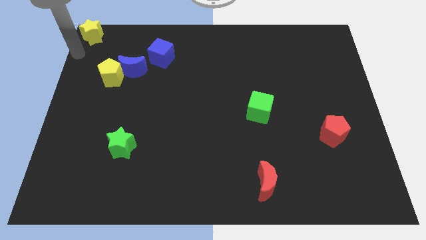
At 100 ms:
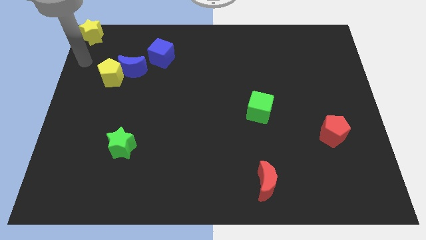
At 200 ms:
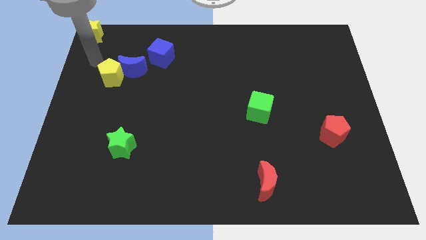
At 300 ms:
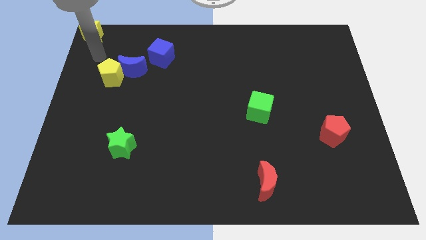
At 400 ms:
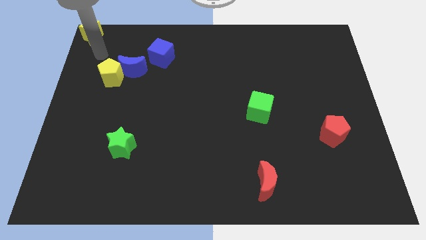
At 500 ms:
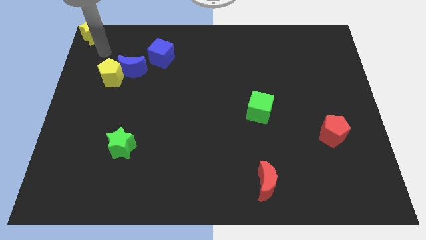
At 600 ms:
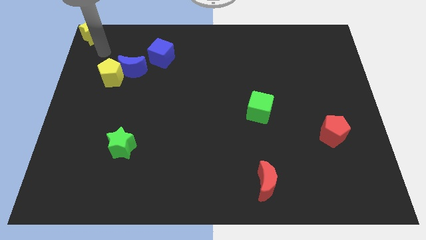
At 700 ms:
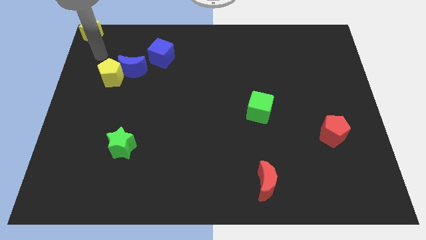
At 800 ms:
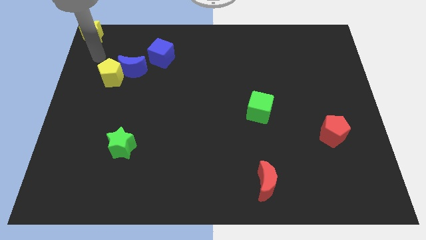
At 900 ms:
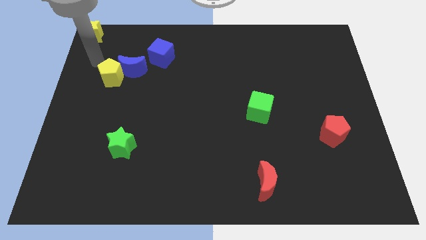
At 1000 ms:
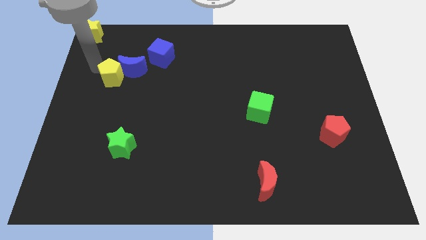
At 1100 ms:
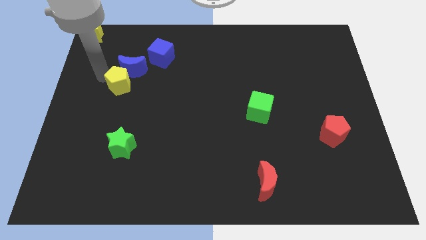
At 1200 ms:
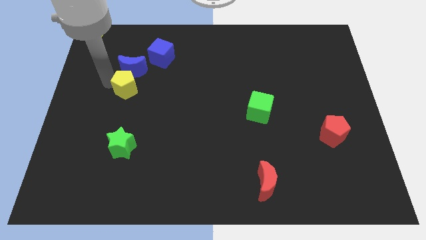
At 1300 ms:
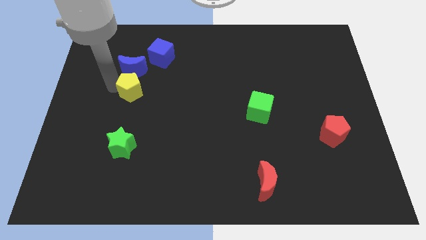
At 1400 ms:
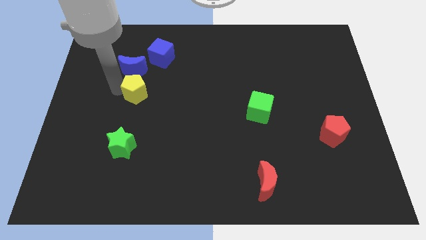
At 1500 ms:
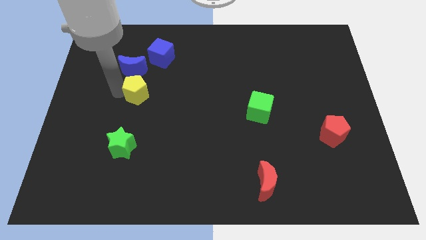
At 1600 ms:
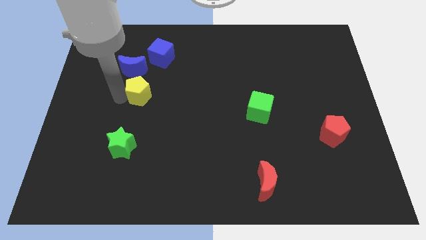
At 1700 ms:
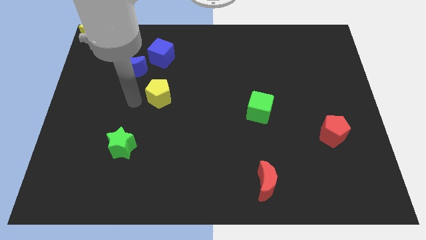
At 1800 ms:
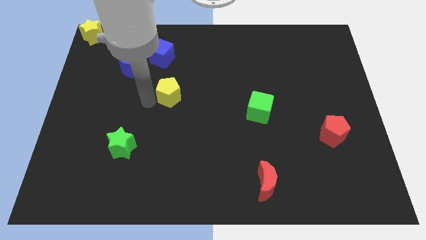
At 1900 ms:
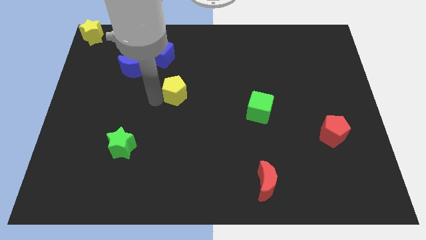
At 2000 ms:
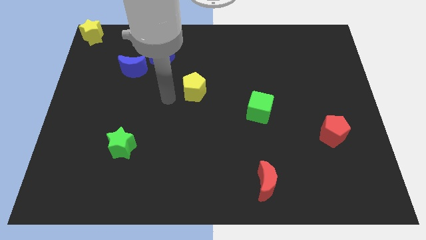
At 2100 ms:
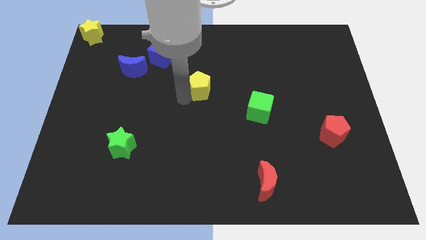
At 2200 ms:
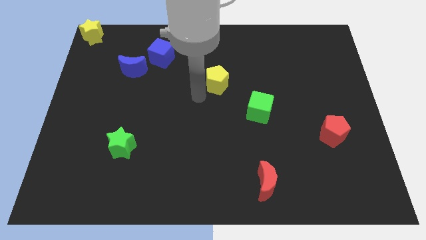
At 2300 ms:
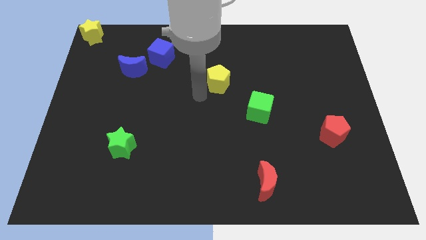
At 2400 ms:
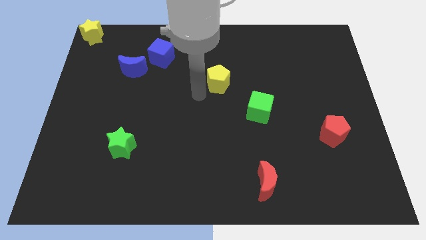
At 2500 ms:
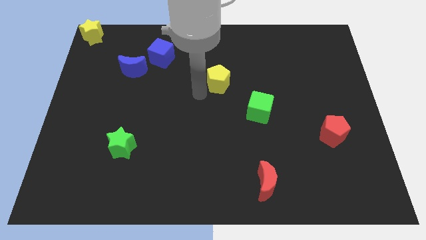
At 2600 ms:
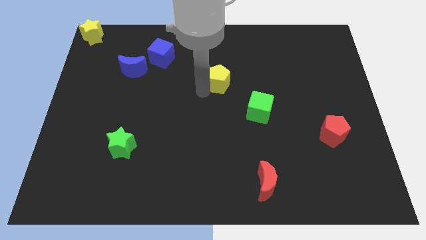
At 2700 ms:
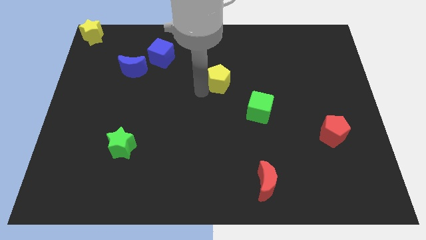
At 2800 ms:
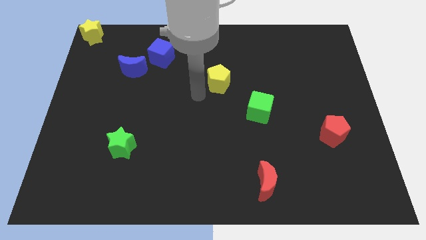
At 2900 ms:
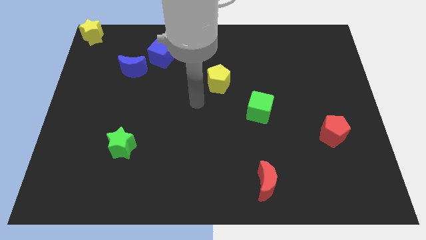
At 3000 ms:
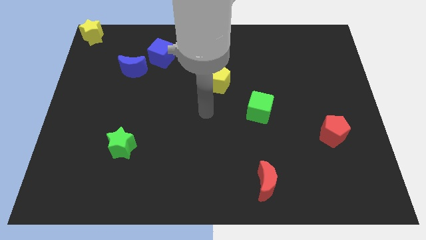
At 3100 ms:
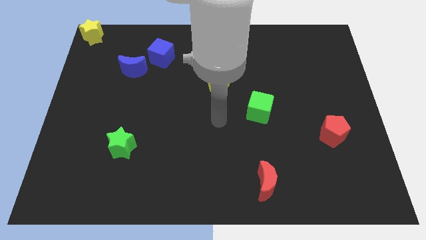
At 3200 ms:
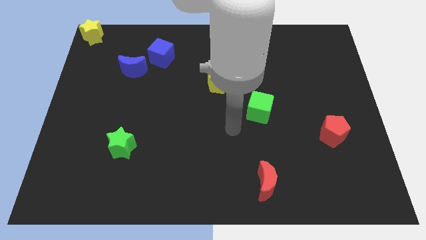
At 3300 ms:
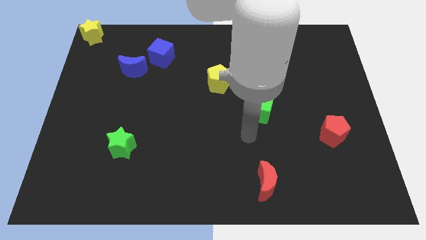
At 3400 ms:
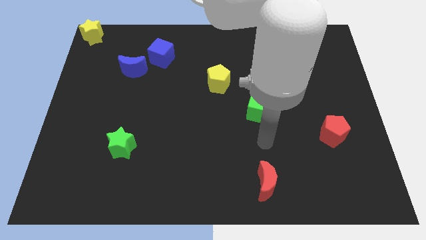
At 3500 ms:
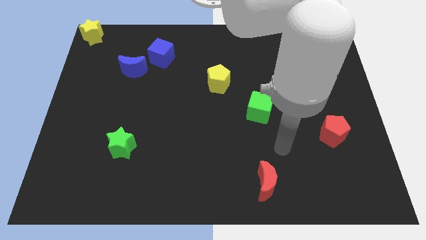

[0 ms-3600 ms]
put the yellow pentagon between the blue cube and green cube

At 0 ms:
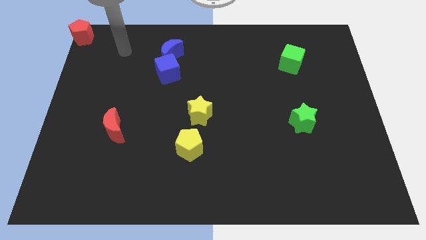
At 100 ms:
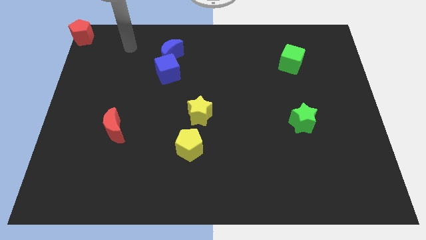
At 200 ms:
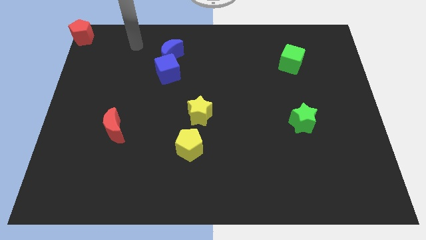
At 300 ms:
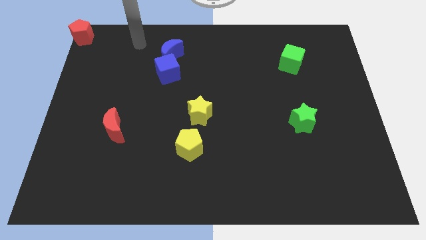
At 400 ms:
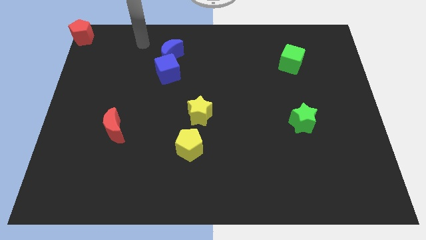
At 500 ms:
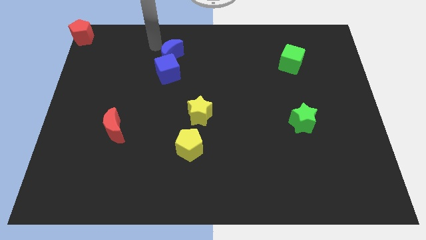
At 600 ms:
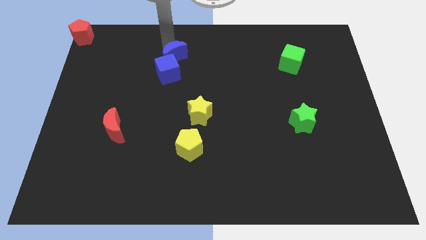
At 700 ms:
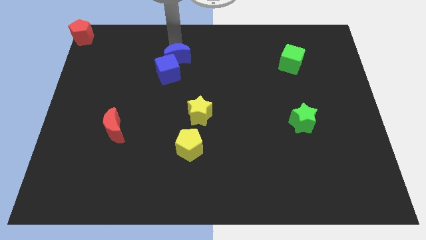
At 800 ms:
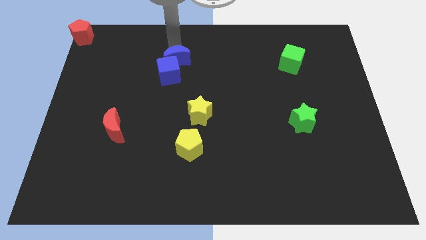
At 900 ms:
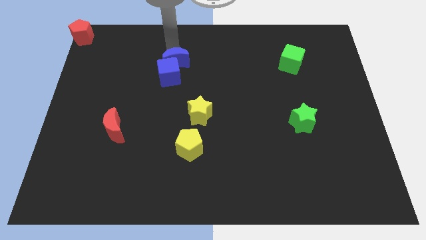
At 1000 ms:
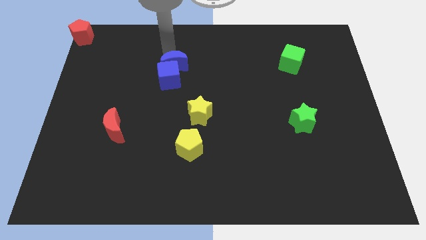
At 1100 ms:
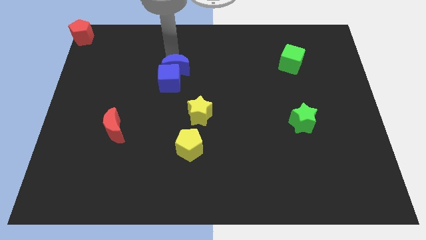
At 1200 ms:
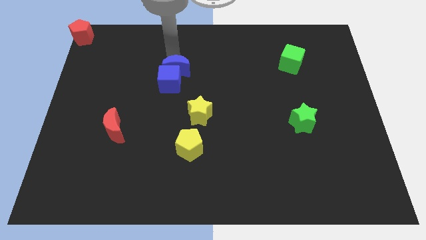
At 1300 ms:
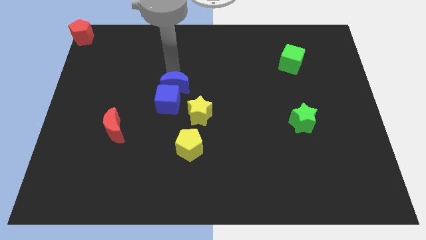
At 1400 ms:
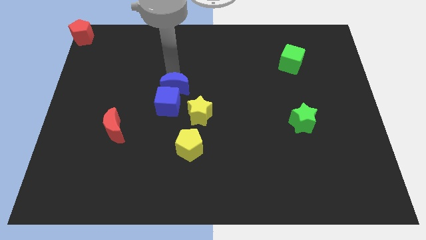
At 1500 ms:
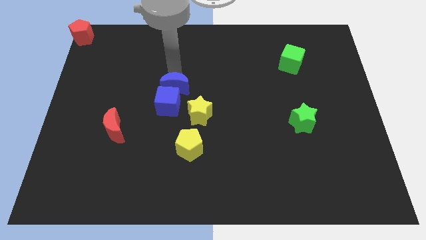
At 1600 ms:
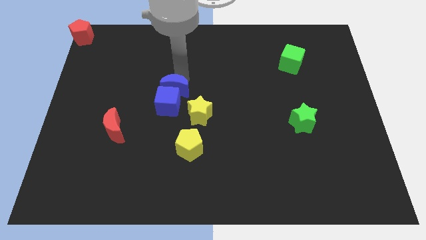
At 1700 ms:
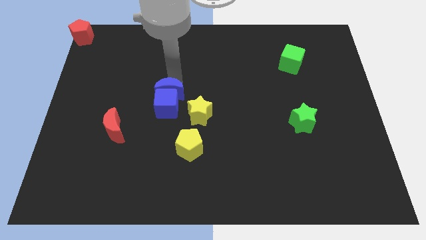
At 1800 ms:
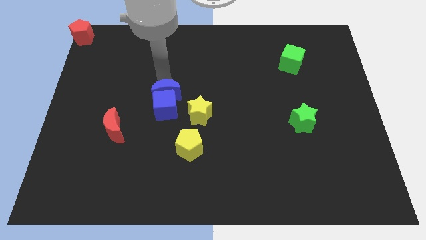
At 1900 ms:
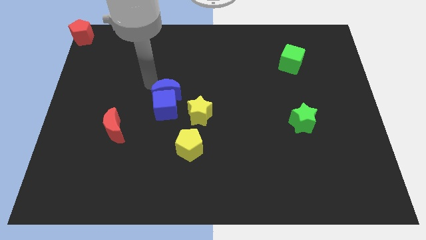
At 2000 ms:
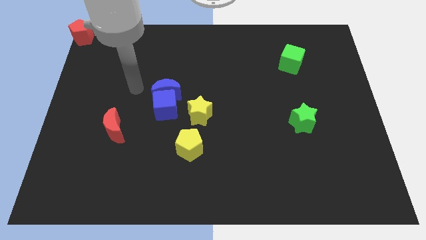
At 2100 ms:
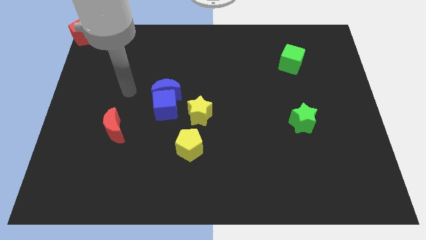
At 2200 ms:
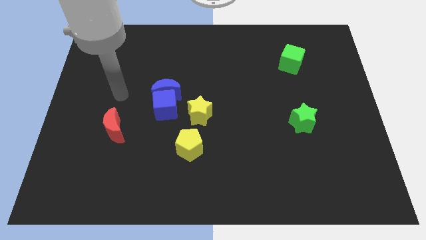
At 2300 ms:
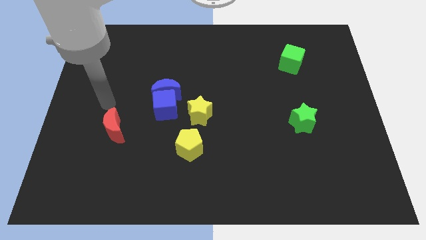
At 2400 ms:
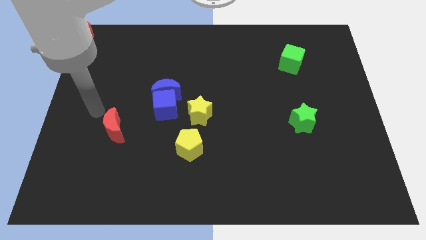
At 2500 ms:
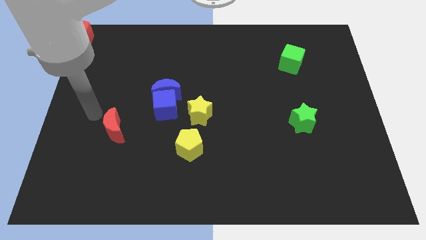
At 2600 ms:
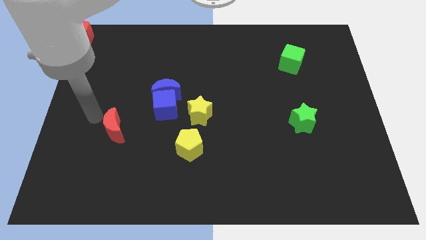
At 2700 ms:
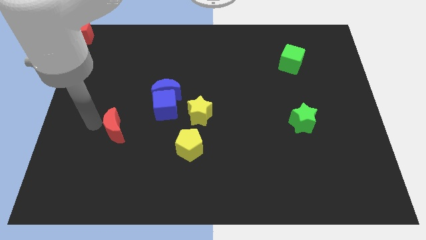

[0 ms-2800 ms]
push the blue cube to the left of the yellow star using blue crescent

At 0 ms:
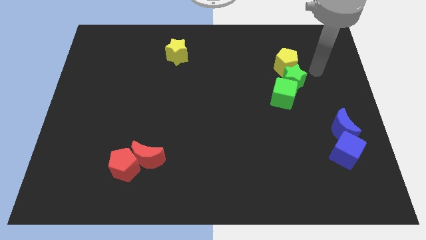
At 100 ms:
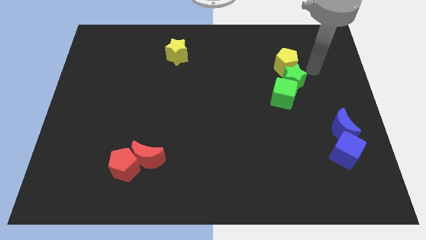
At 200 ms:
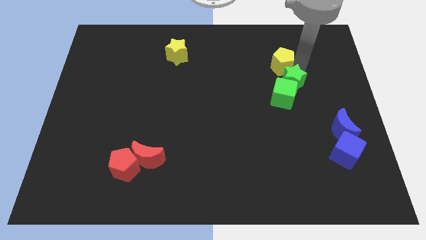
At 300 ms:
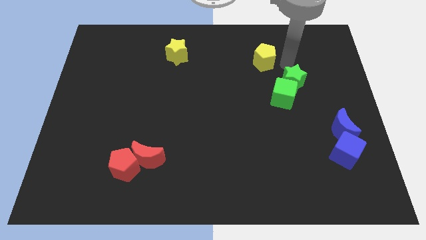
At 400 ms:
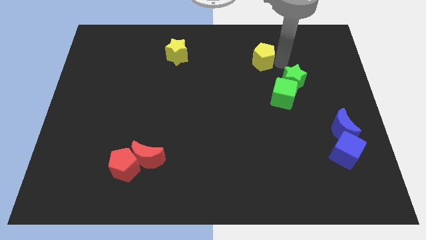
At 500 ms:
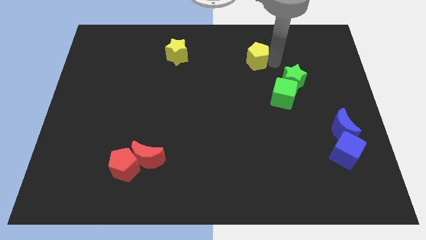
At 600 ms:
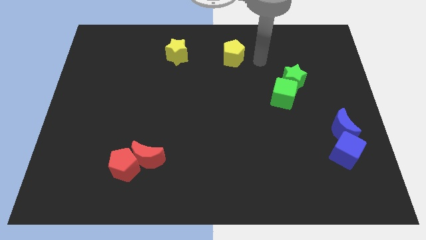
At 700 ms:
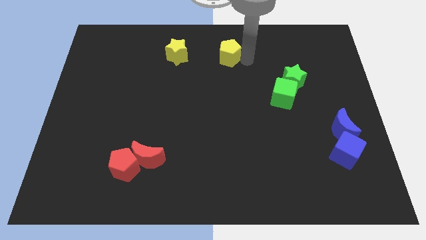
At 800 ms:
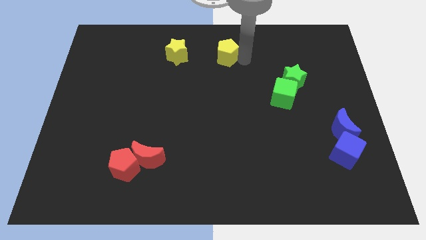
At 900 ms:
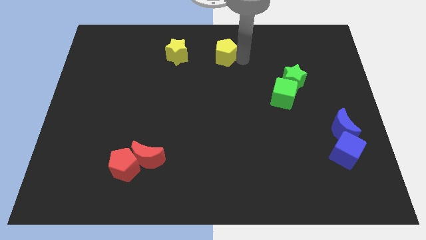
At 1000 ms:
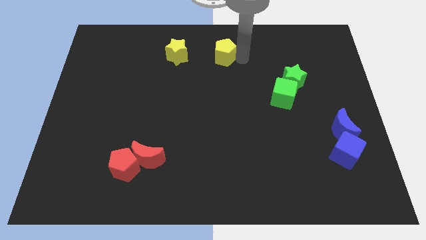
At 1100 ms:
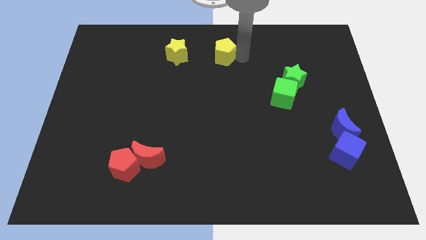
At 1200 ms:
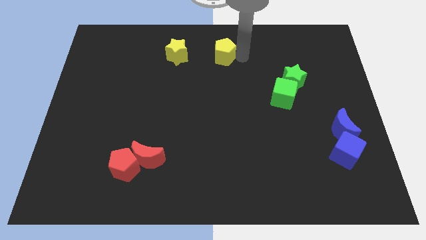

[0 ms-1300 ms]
separate the yellow star from the green star

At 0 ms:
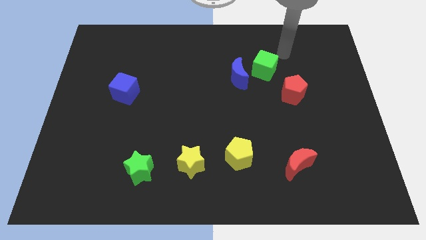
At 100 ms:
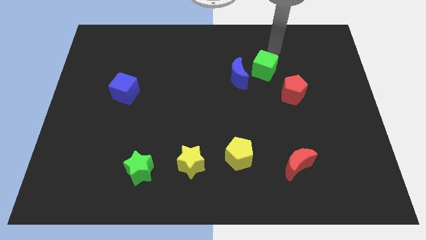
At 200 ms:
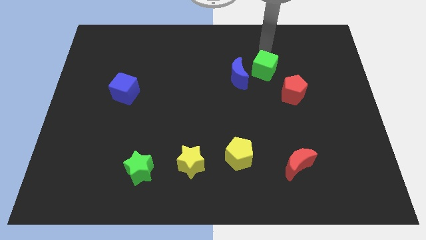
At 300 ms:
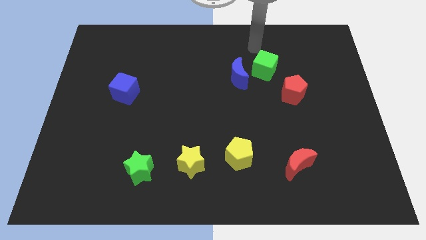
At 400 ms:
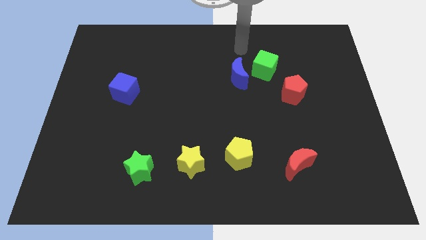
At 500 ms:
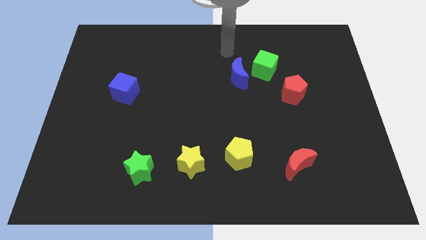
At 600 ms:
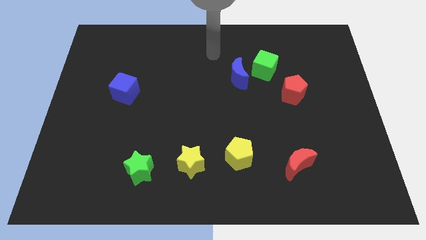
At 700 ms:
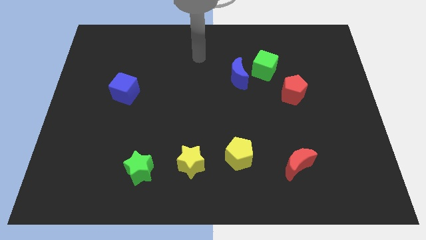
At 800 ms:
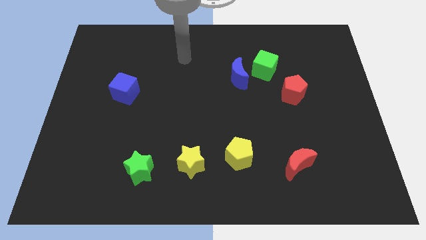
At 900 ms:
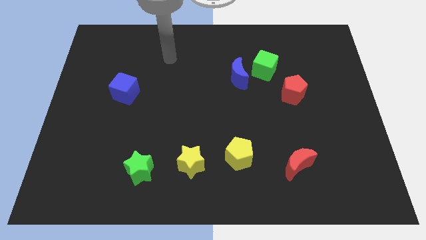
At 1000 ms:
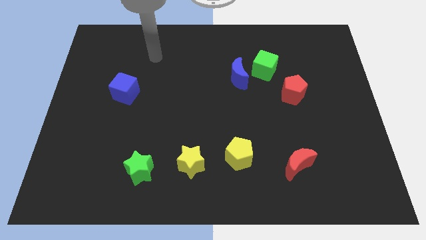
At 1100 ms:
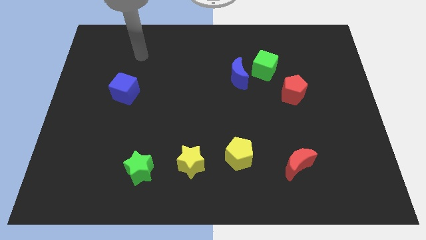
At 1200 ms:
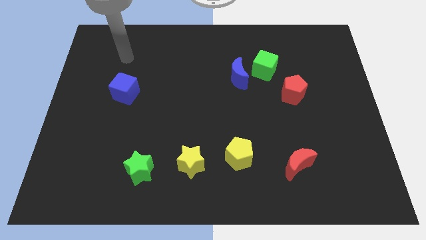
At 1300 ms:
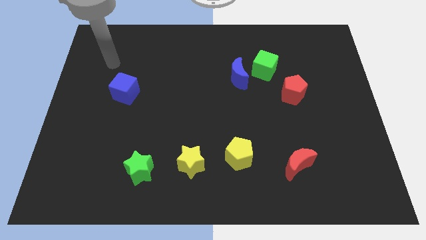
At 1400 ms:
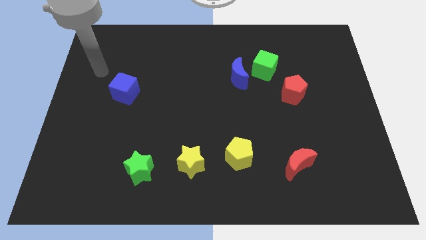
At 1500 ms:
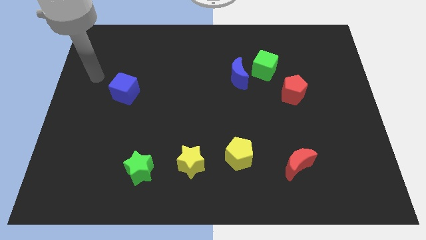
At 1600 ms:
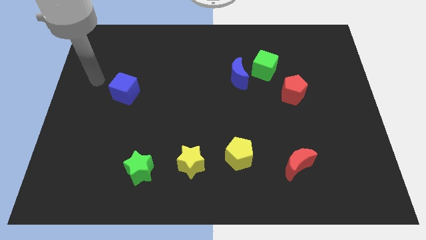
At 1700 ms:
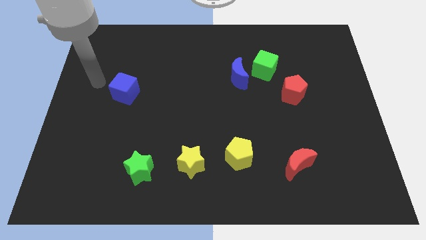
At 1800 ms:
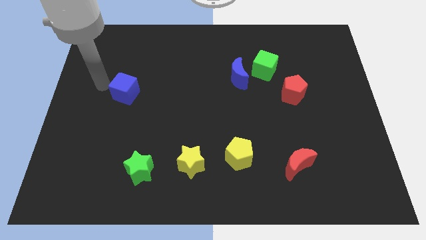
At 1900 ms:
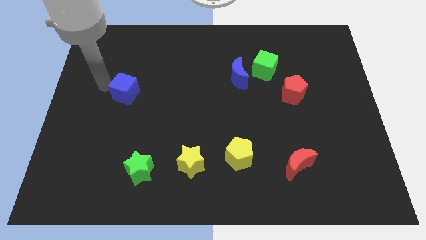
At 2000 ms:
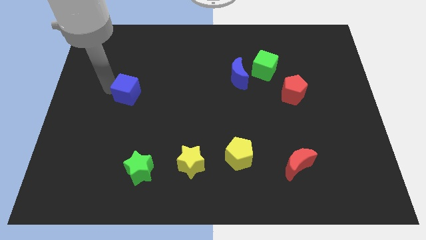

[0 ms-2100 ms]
move the arm towards the blue cube
